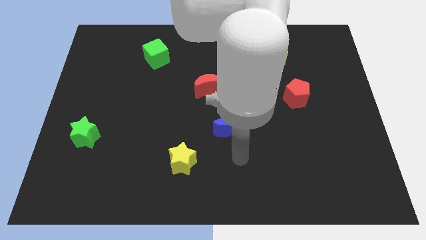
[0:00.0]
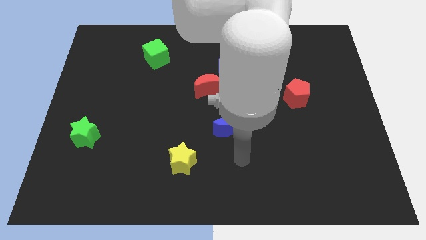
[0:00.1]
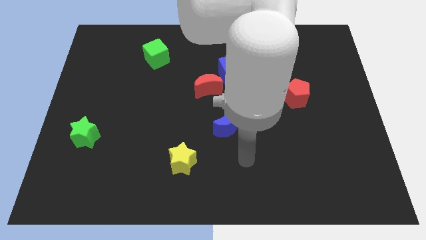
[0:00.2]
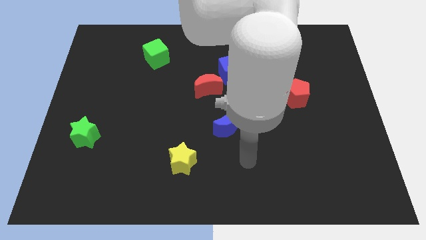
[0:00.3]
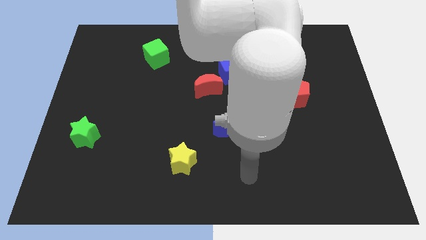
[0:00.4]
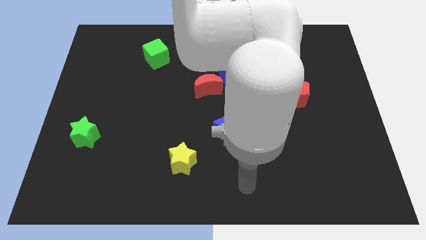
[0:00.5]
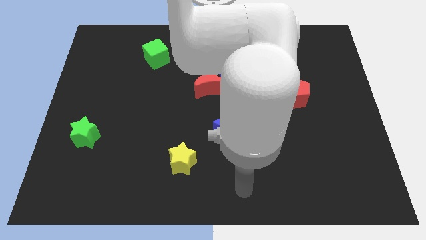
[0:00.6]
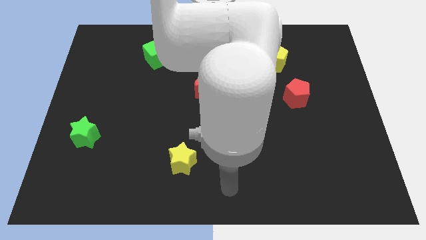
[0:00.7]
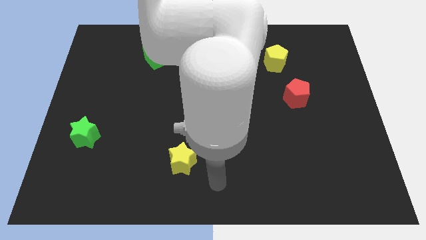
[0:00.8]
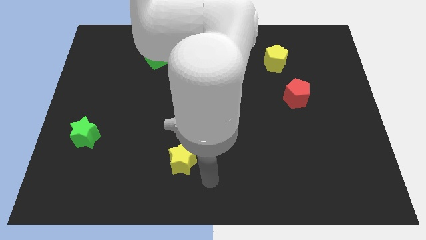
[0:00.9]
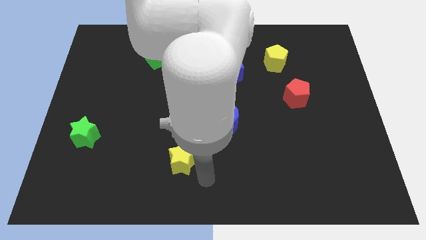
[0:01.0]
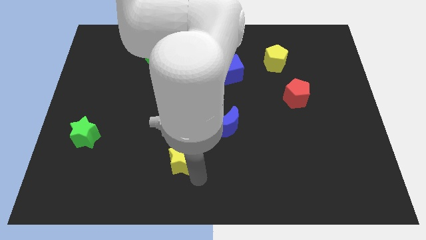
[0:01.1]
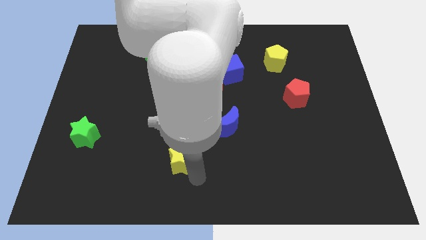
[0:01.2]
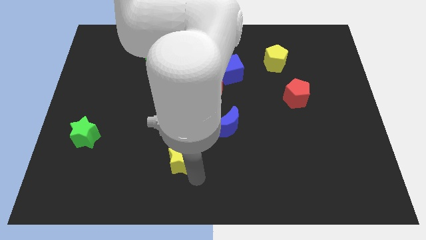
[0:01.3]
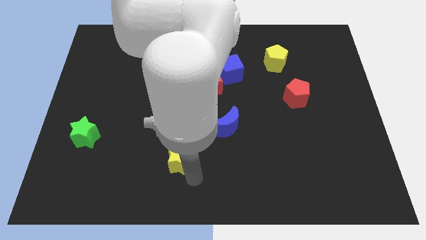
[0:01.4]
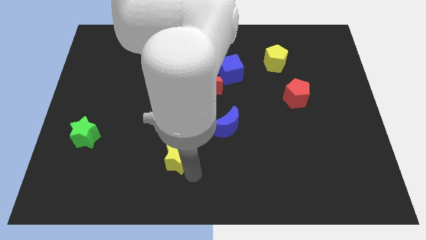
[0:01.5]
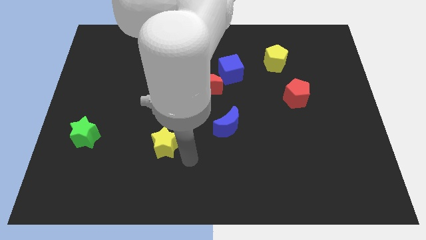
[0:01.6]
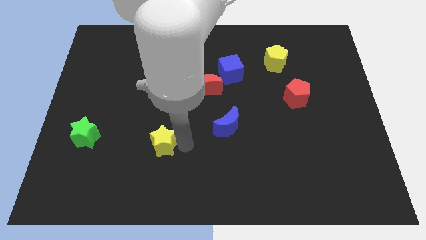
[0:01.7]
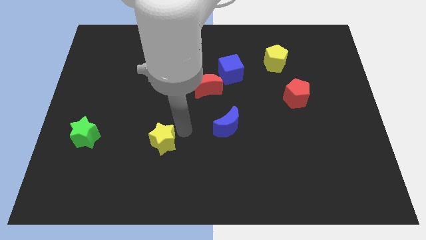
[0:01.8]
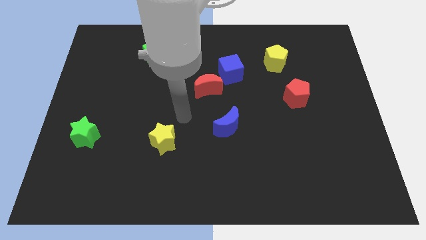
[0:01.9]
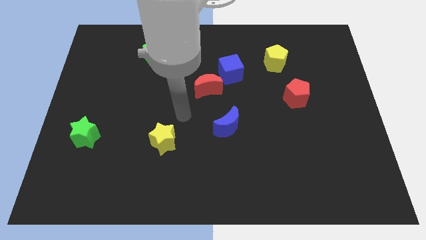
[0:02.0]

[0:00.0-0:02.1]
move the yellow star to the right of the green star

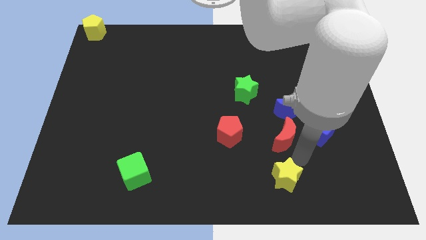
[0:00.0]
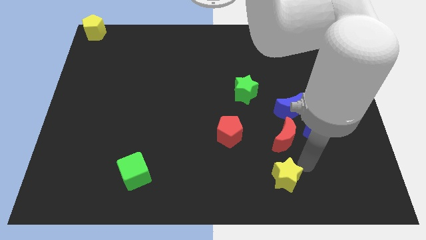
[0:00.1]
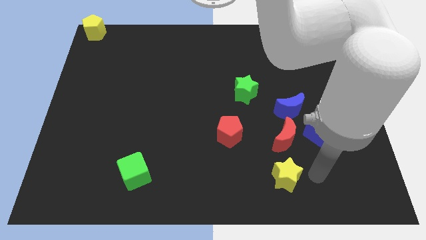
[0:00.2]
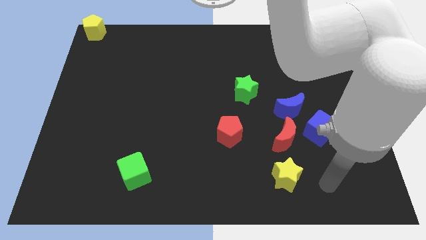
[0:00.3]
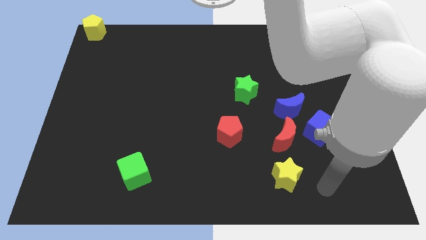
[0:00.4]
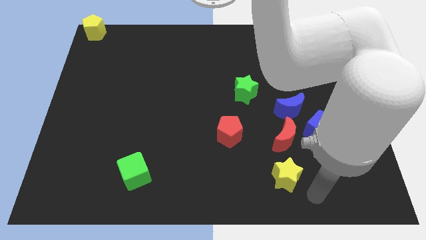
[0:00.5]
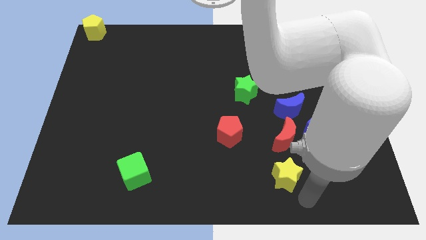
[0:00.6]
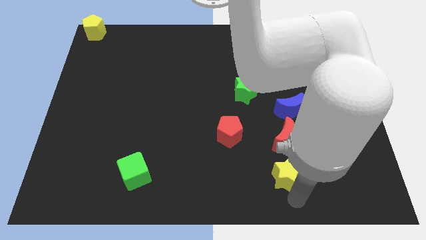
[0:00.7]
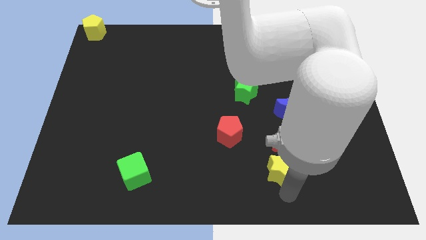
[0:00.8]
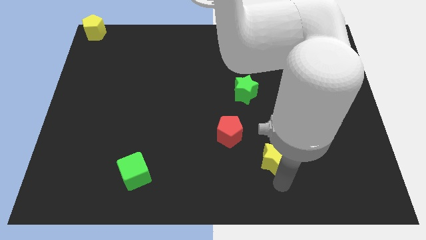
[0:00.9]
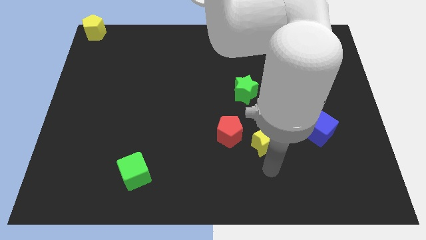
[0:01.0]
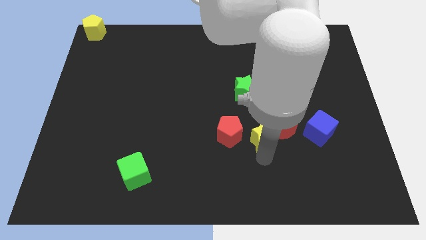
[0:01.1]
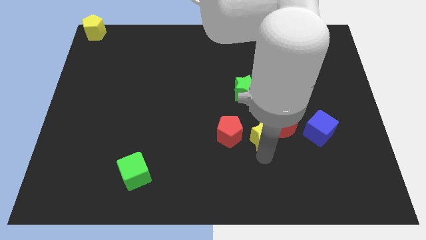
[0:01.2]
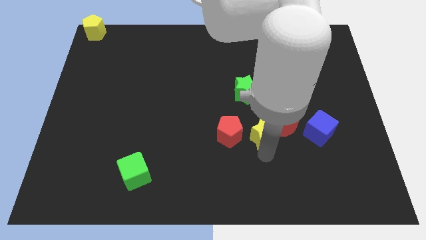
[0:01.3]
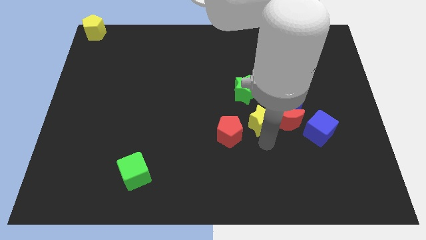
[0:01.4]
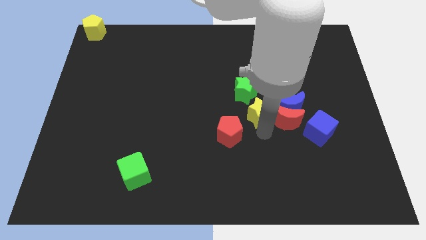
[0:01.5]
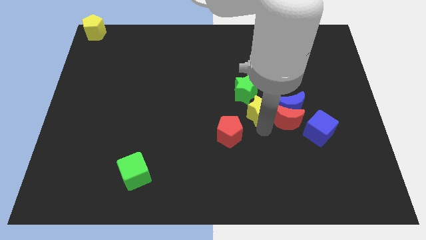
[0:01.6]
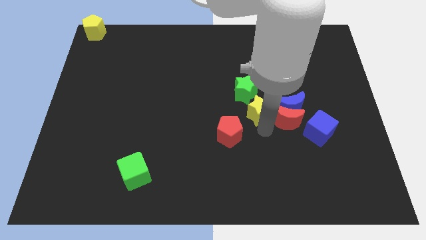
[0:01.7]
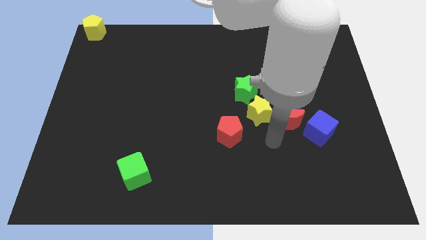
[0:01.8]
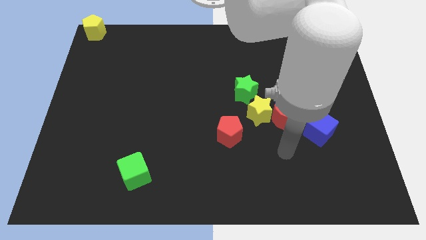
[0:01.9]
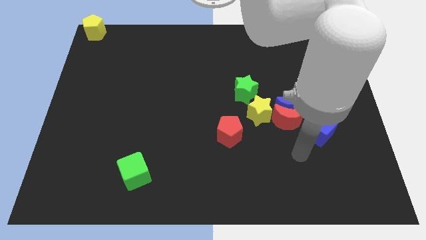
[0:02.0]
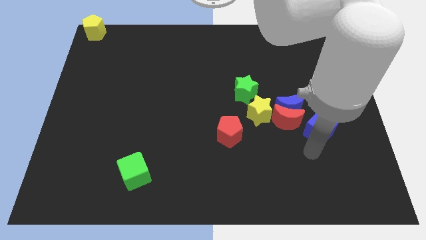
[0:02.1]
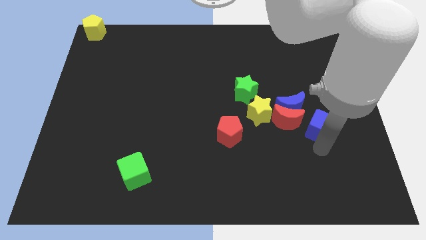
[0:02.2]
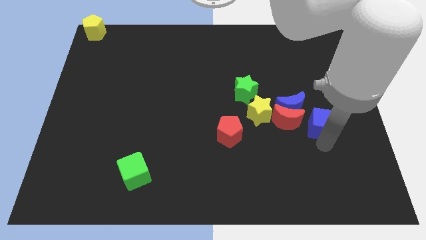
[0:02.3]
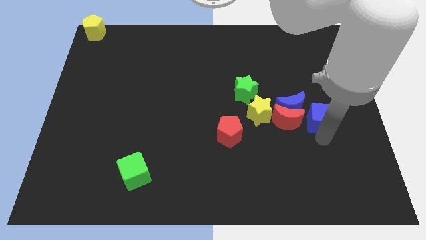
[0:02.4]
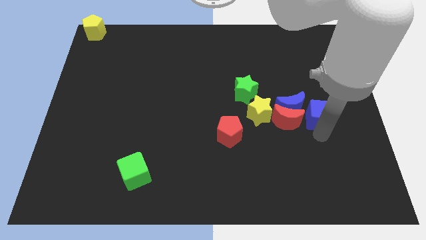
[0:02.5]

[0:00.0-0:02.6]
push the yellow star below right to the green star

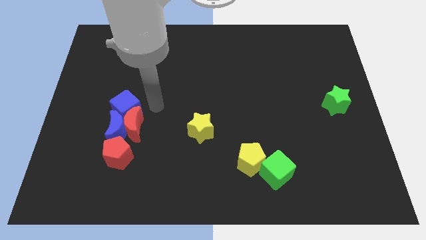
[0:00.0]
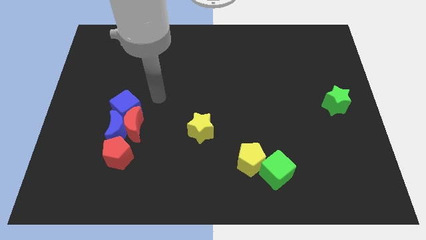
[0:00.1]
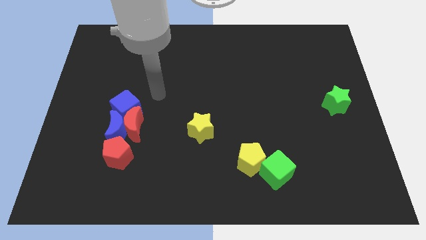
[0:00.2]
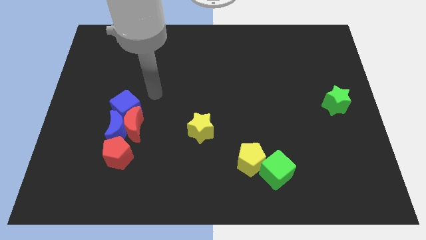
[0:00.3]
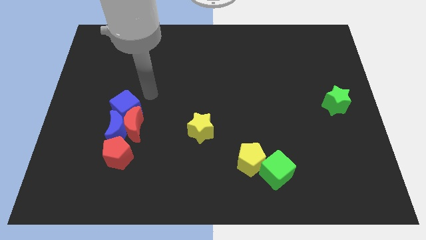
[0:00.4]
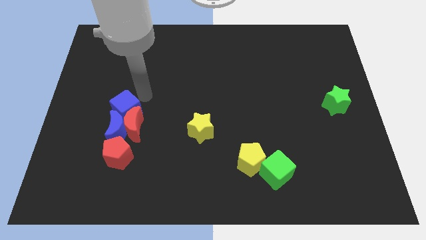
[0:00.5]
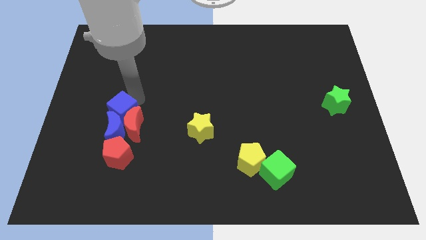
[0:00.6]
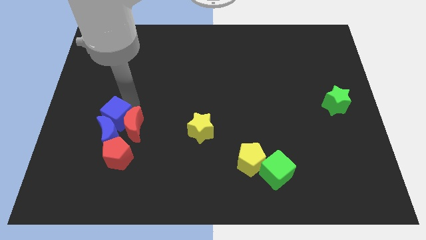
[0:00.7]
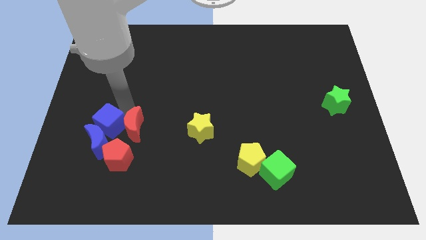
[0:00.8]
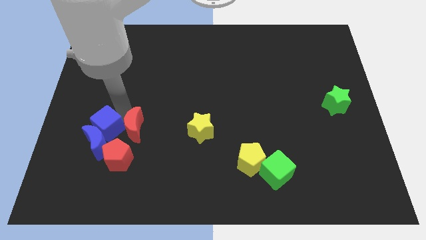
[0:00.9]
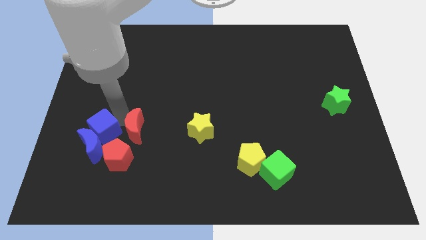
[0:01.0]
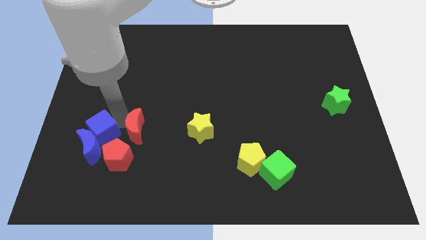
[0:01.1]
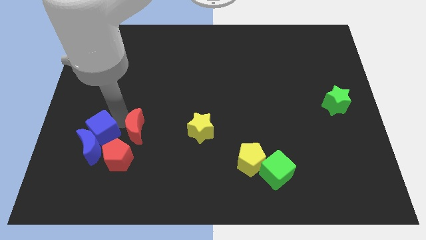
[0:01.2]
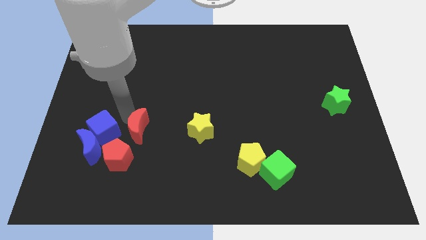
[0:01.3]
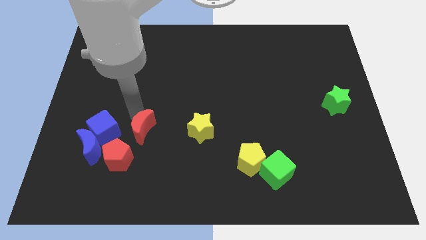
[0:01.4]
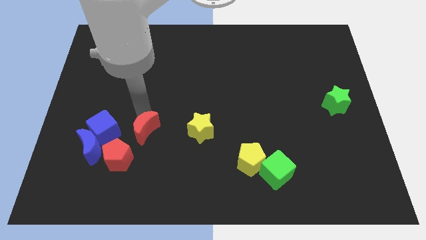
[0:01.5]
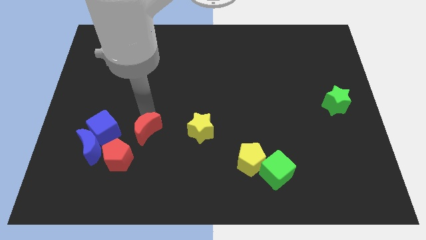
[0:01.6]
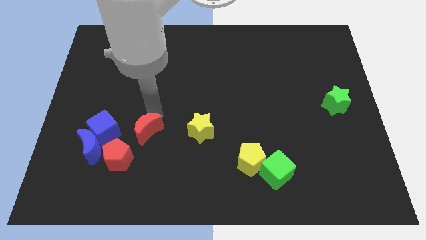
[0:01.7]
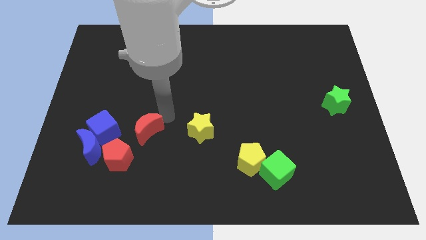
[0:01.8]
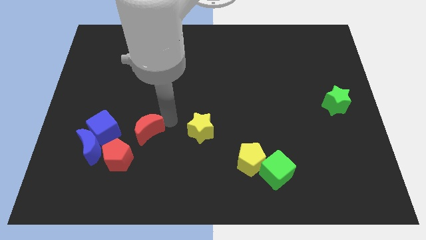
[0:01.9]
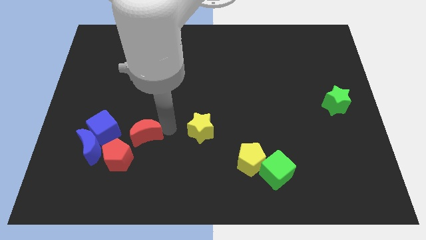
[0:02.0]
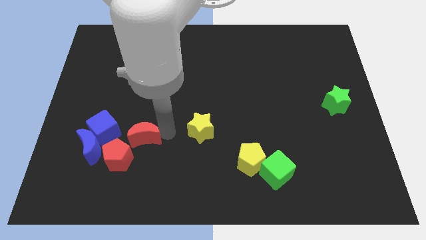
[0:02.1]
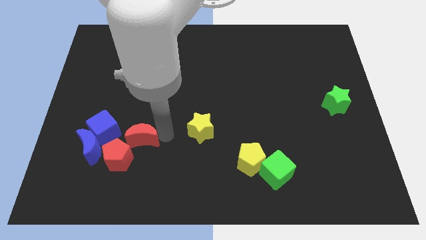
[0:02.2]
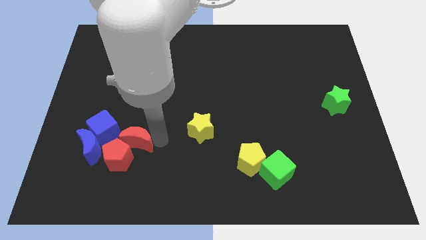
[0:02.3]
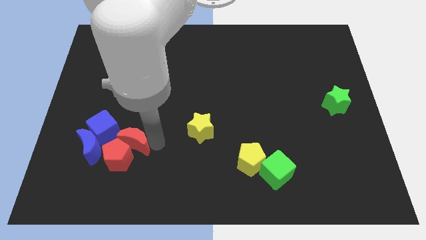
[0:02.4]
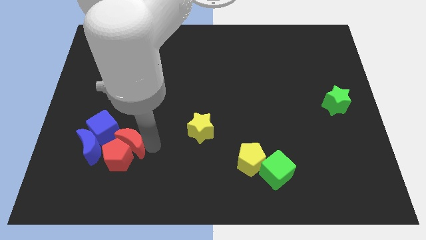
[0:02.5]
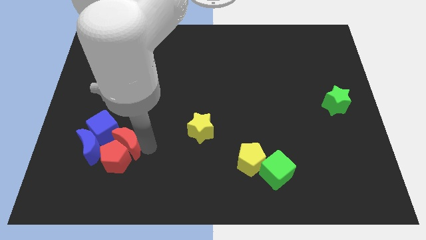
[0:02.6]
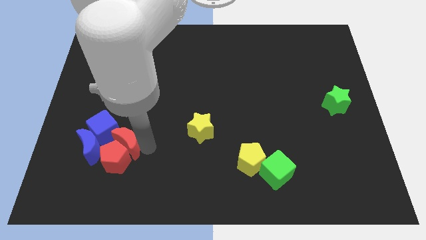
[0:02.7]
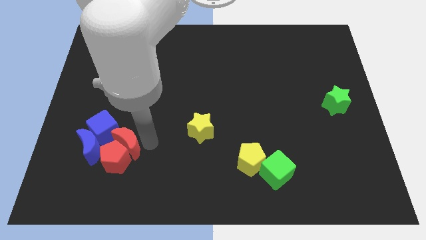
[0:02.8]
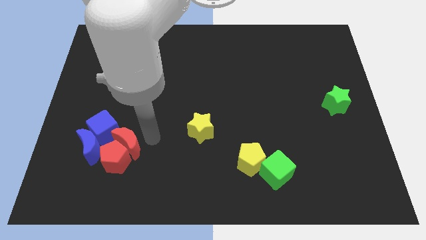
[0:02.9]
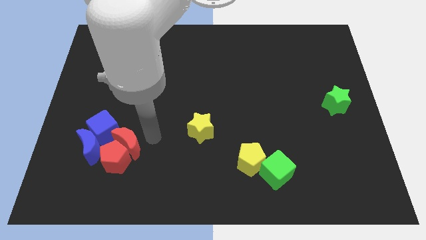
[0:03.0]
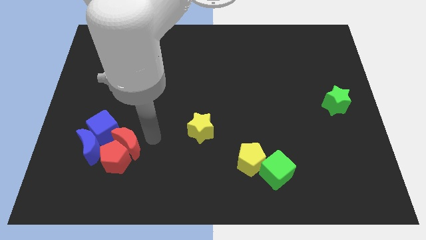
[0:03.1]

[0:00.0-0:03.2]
push the red moon into the red pentagon

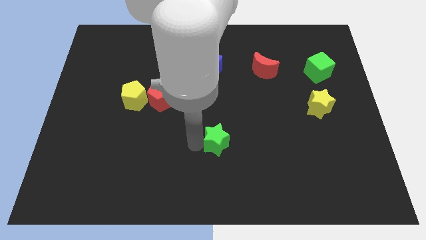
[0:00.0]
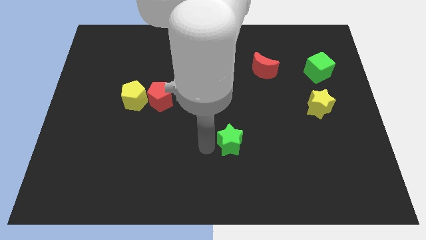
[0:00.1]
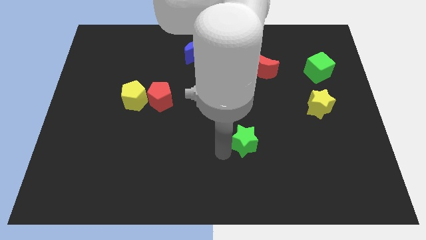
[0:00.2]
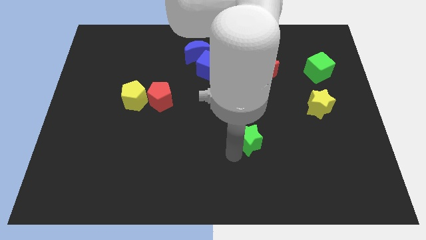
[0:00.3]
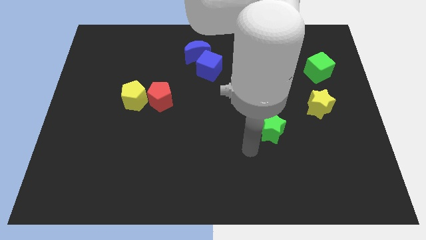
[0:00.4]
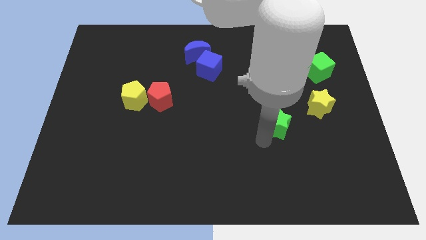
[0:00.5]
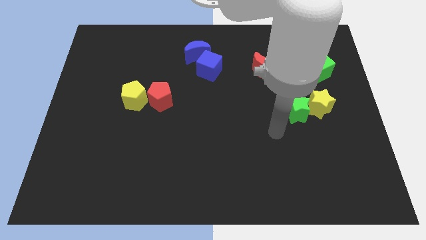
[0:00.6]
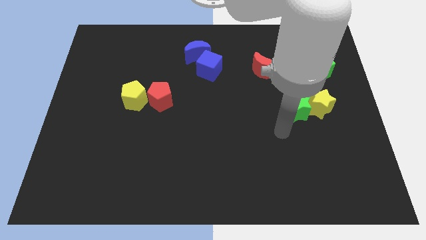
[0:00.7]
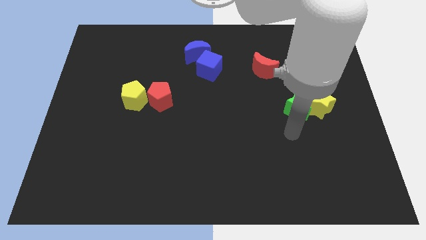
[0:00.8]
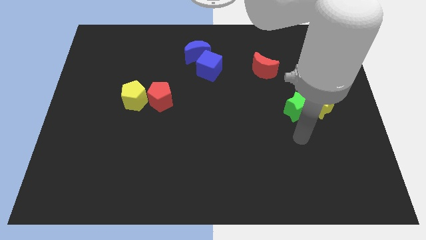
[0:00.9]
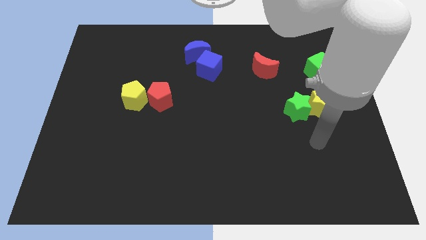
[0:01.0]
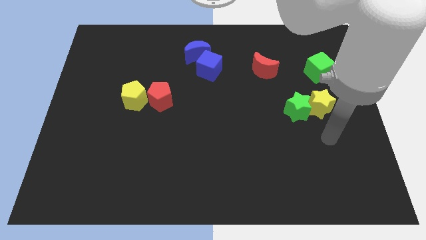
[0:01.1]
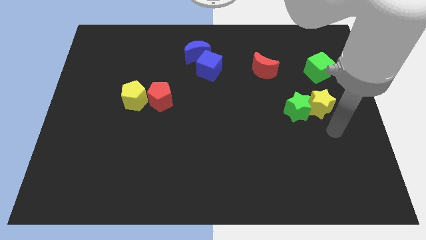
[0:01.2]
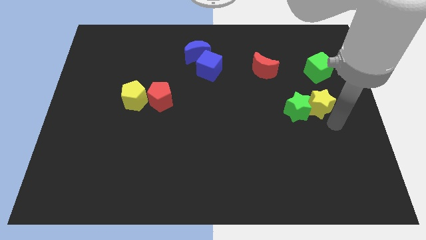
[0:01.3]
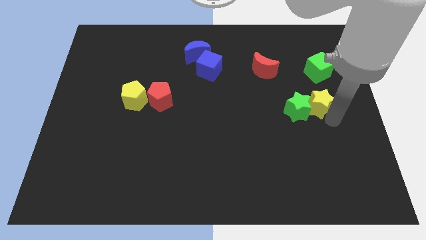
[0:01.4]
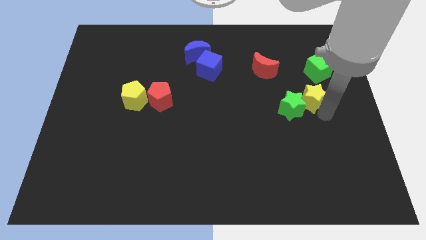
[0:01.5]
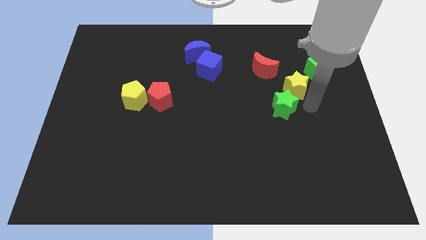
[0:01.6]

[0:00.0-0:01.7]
place the green star close to yellow star
